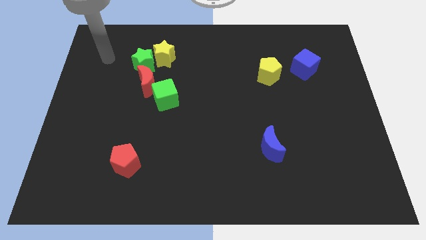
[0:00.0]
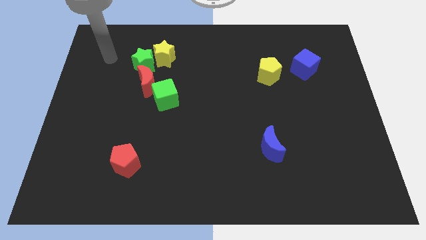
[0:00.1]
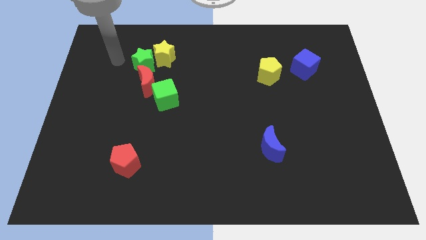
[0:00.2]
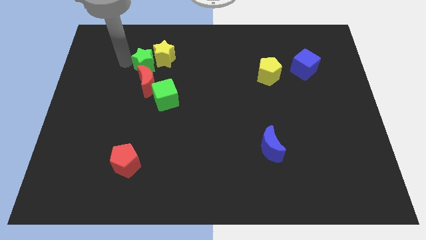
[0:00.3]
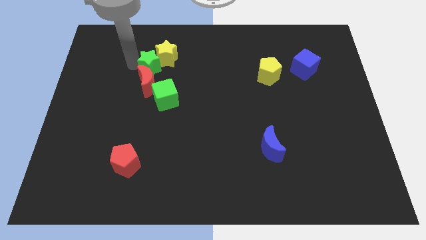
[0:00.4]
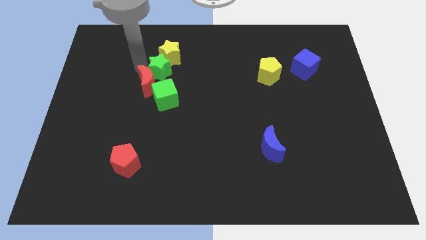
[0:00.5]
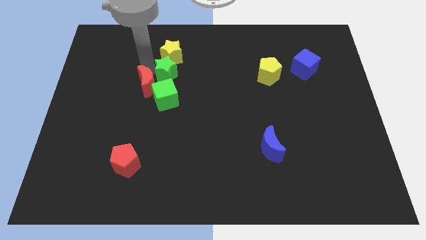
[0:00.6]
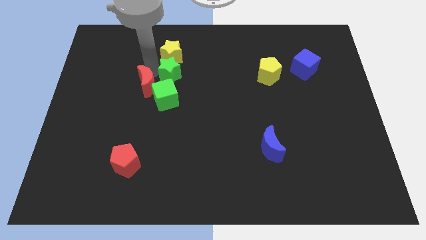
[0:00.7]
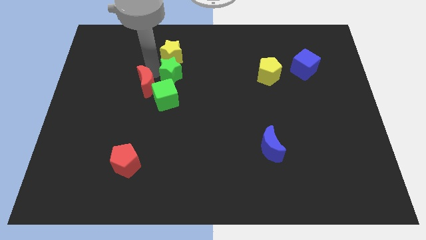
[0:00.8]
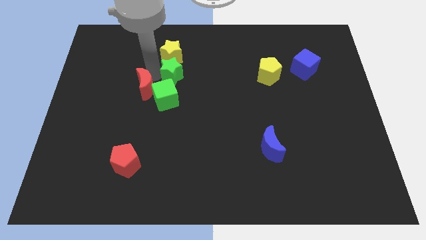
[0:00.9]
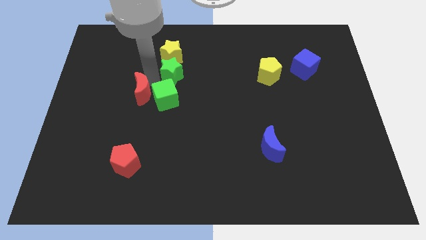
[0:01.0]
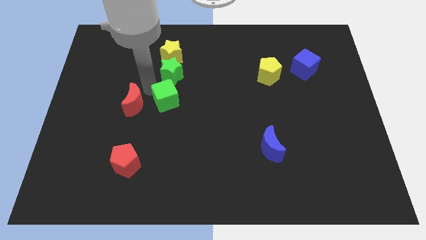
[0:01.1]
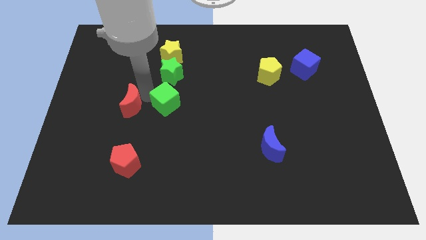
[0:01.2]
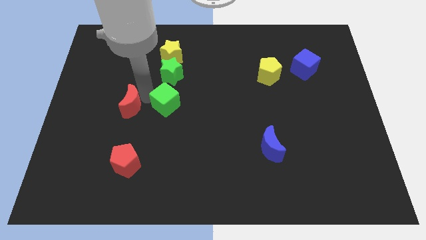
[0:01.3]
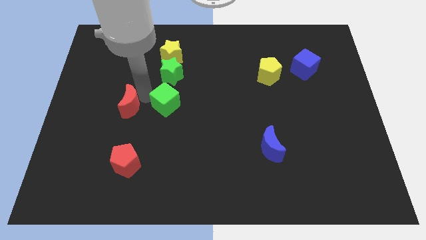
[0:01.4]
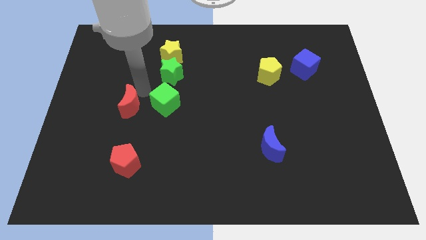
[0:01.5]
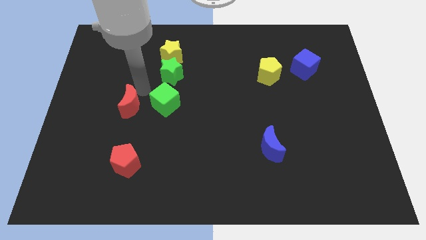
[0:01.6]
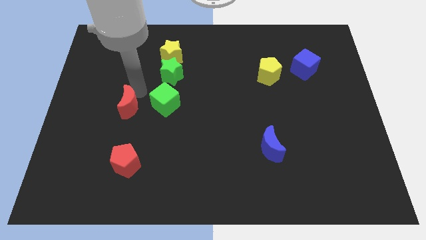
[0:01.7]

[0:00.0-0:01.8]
separate the group of blocks towards the center of the board

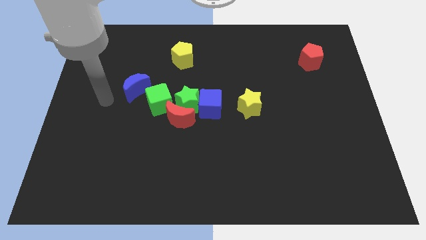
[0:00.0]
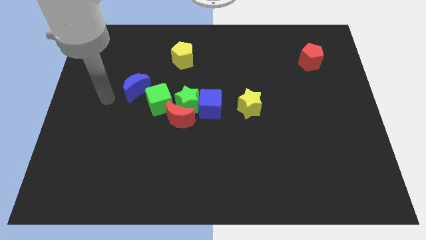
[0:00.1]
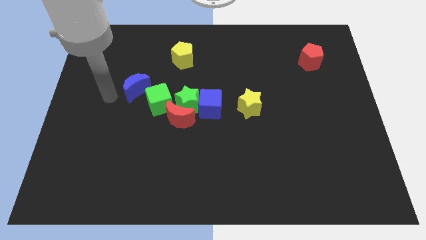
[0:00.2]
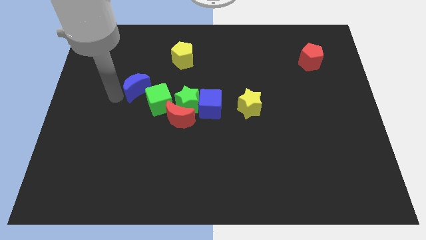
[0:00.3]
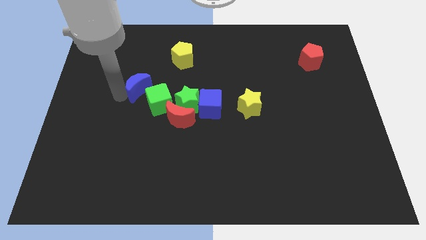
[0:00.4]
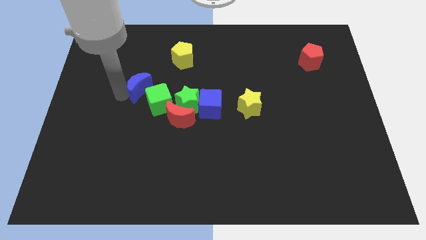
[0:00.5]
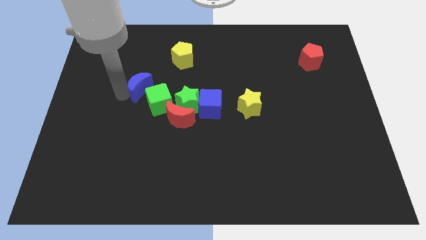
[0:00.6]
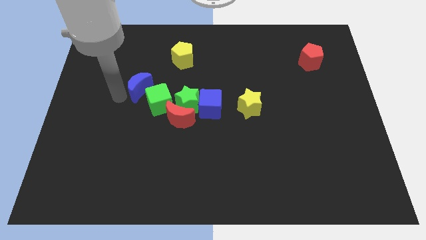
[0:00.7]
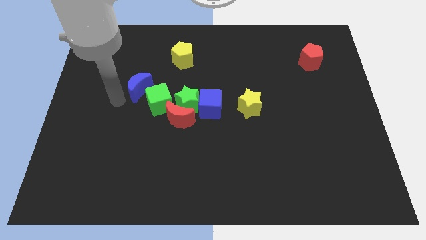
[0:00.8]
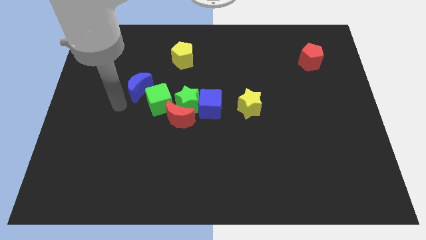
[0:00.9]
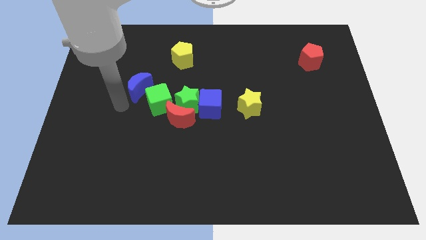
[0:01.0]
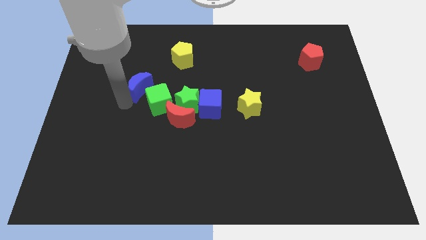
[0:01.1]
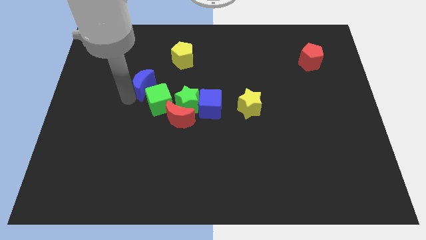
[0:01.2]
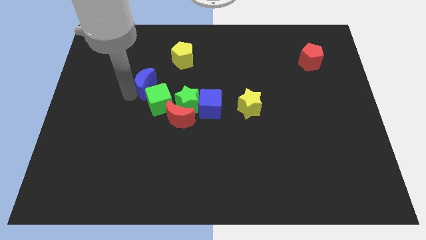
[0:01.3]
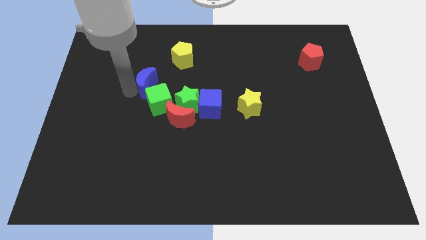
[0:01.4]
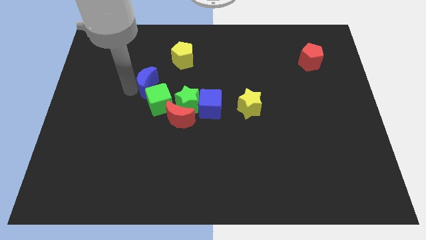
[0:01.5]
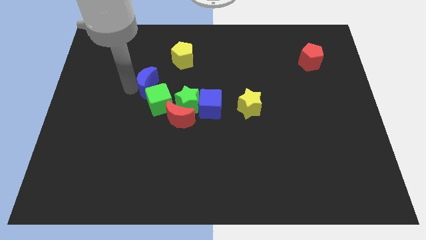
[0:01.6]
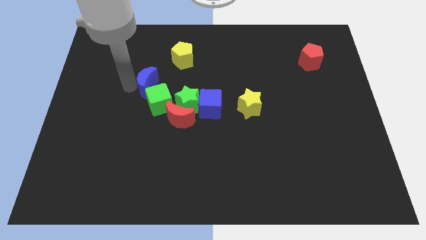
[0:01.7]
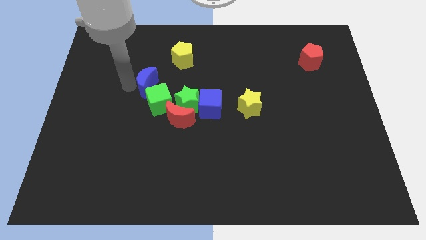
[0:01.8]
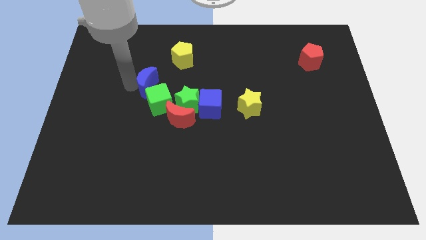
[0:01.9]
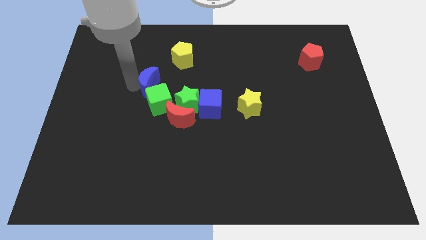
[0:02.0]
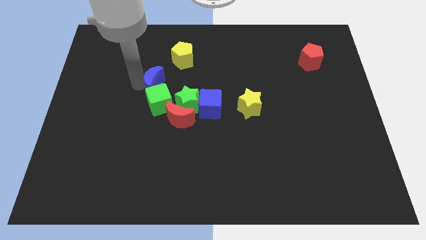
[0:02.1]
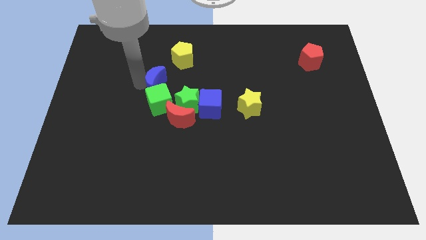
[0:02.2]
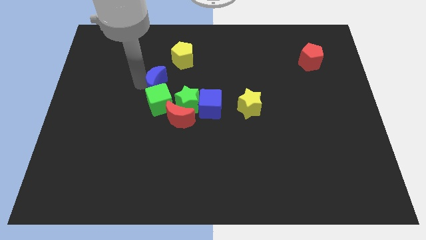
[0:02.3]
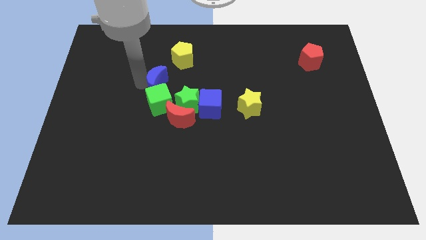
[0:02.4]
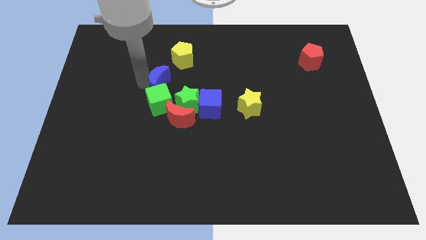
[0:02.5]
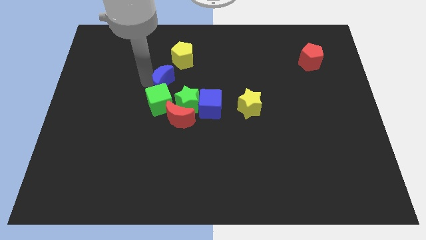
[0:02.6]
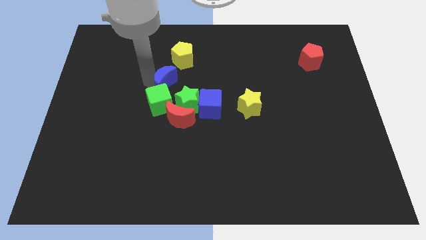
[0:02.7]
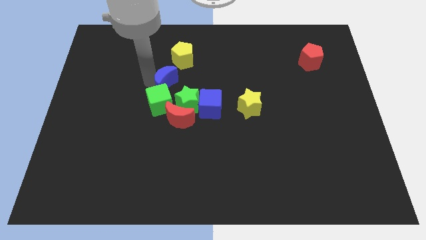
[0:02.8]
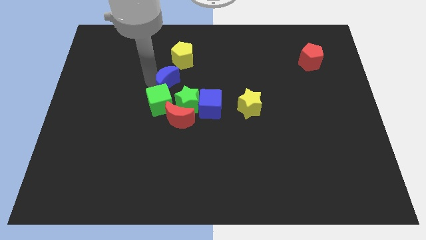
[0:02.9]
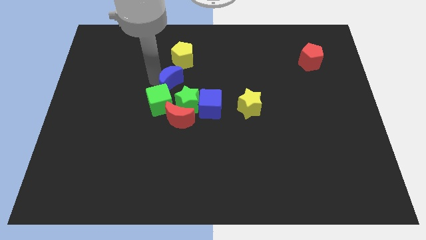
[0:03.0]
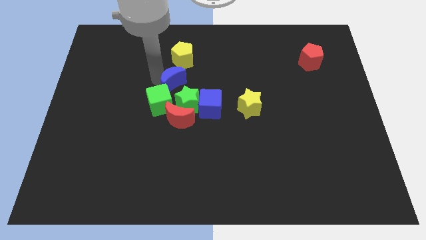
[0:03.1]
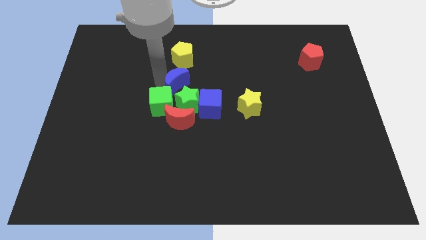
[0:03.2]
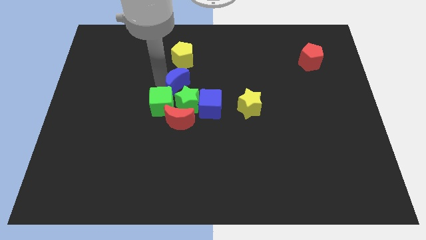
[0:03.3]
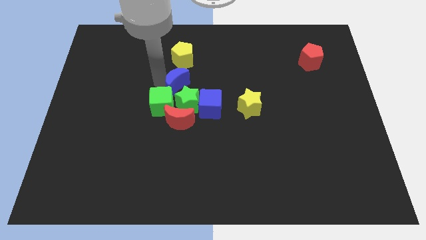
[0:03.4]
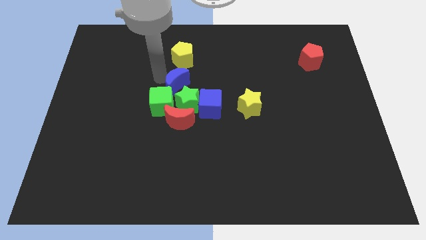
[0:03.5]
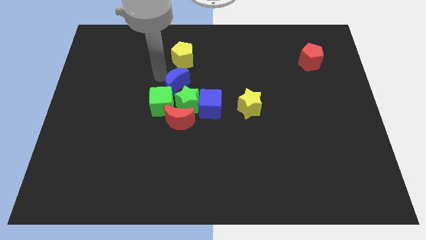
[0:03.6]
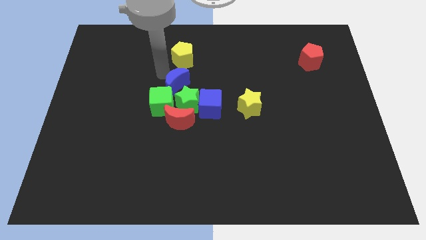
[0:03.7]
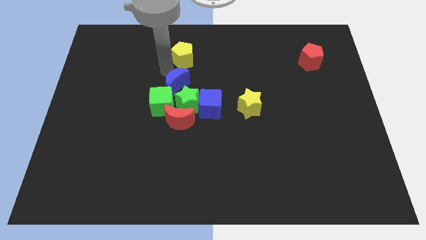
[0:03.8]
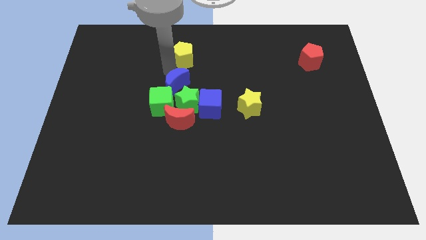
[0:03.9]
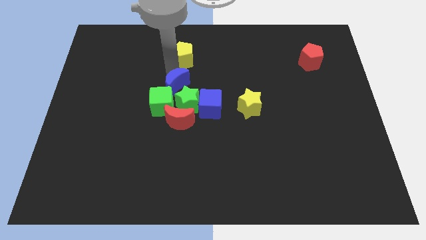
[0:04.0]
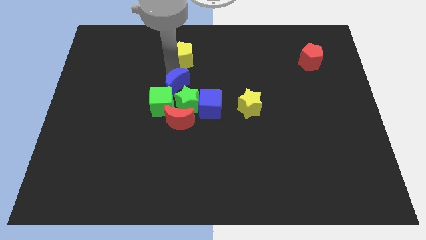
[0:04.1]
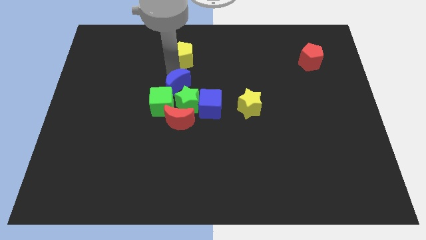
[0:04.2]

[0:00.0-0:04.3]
move the blue crescent below to the yellow pentagon

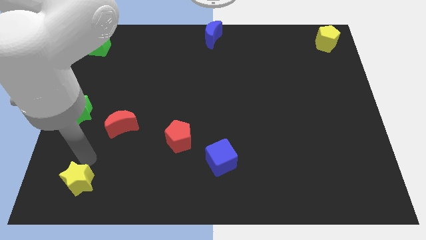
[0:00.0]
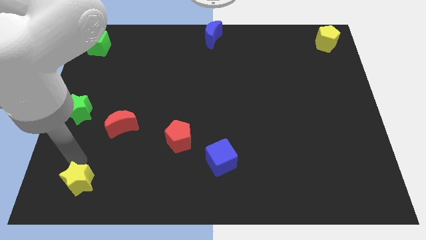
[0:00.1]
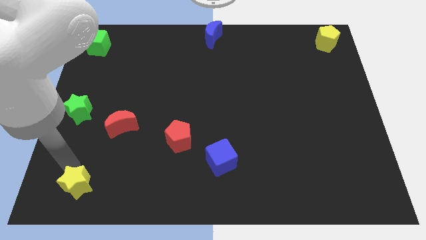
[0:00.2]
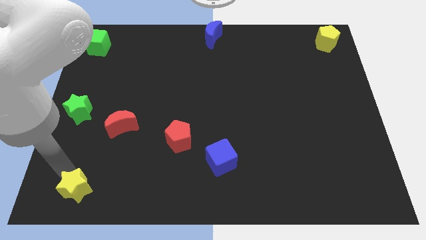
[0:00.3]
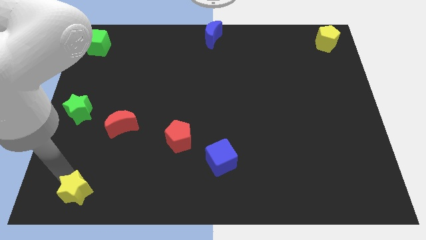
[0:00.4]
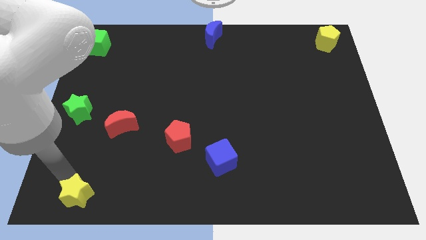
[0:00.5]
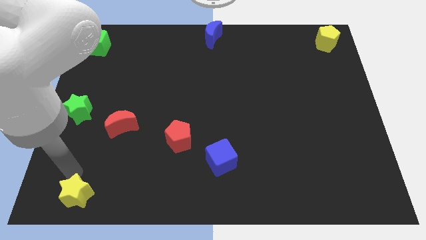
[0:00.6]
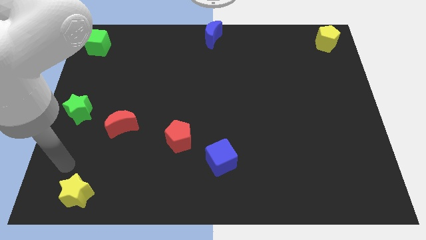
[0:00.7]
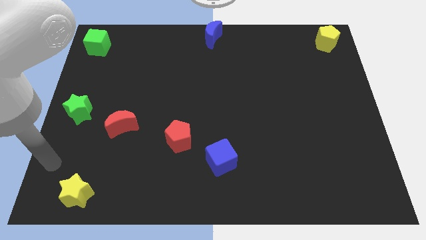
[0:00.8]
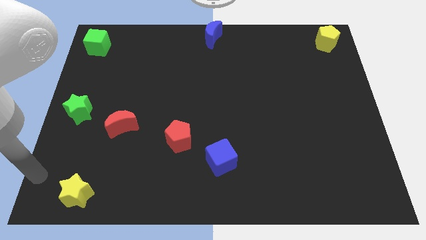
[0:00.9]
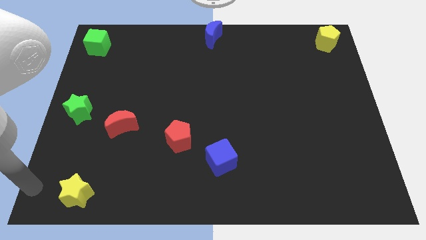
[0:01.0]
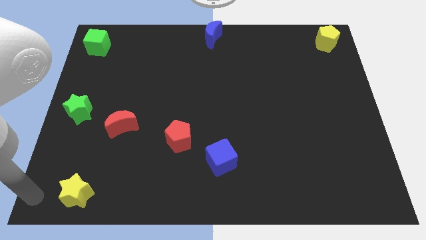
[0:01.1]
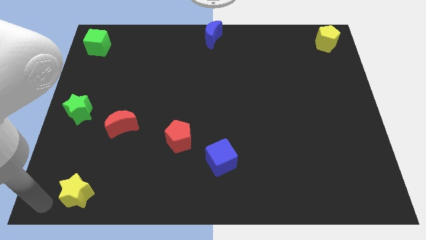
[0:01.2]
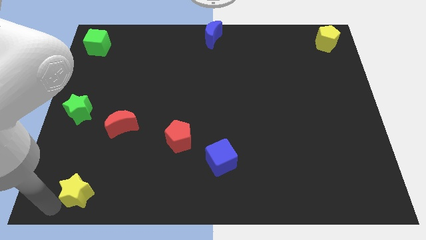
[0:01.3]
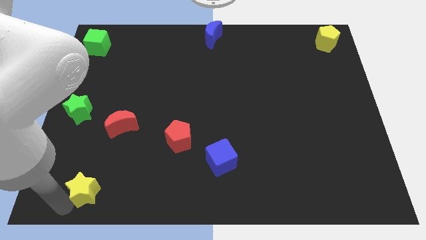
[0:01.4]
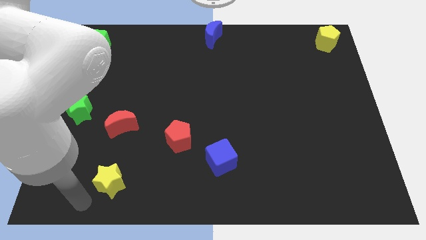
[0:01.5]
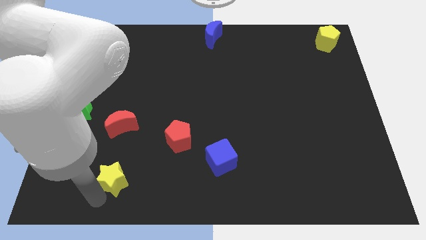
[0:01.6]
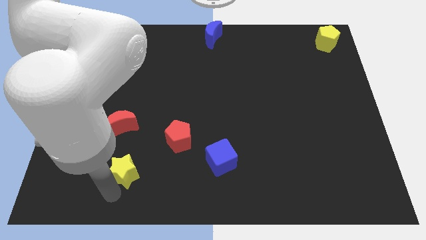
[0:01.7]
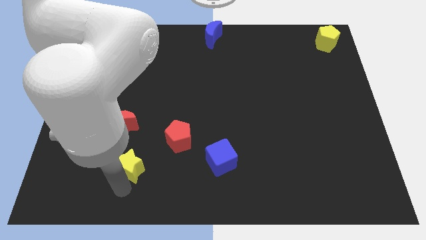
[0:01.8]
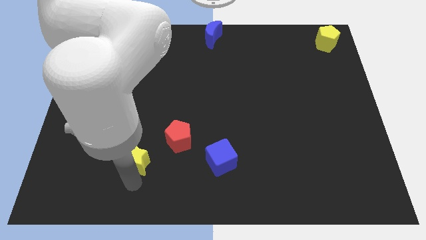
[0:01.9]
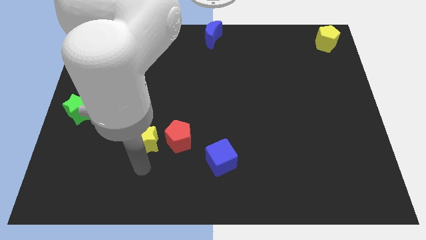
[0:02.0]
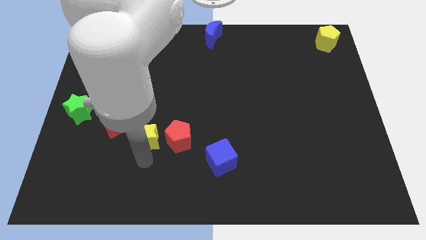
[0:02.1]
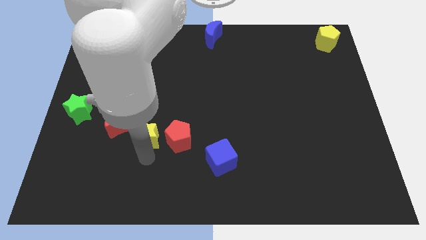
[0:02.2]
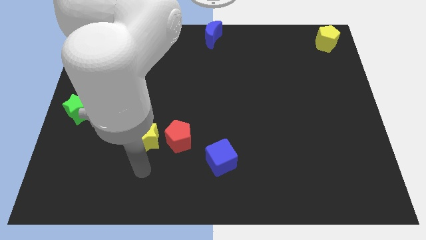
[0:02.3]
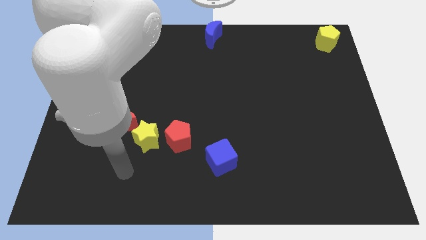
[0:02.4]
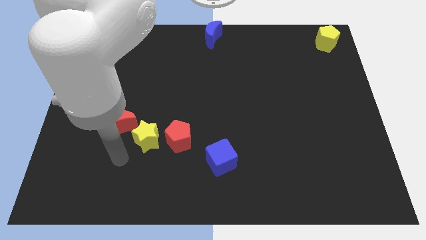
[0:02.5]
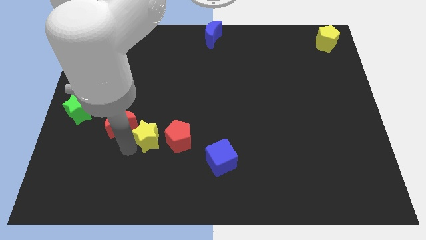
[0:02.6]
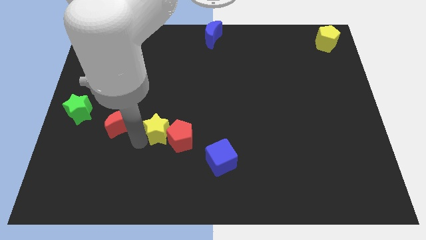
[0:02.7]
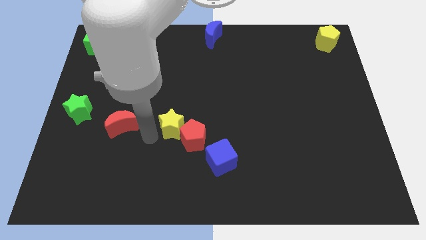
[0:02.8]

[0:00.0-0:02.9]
place yellow star between red pentagon and red moon
